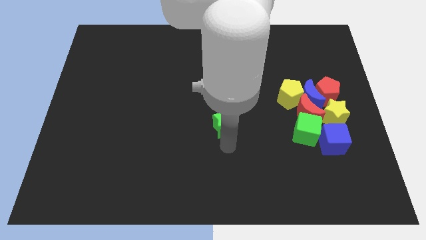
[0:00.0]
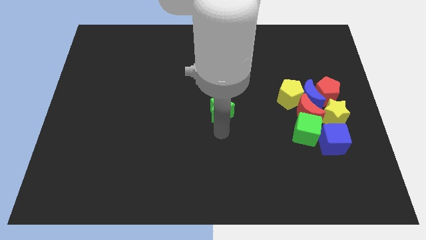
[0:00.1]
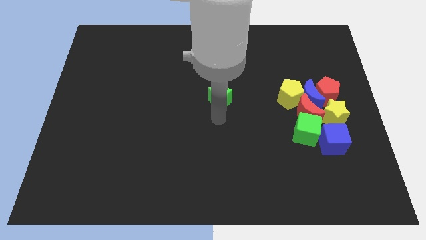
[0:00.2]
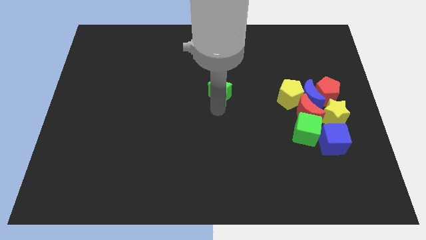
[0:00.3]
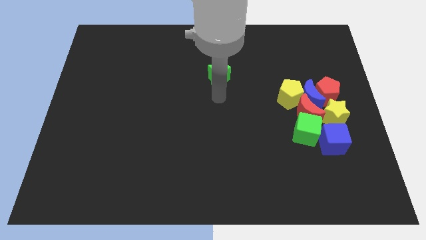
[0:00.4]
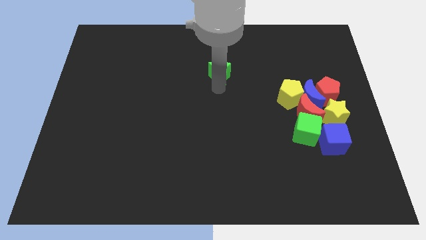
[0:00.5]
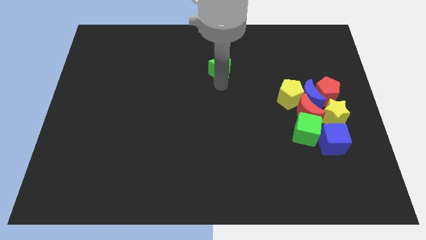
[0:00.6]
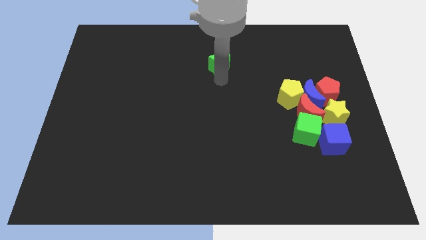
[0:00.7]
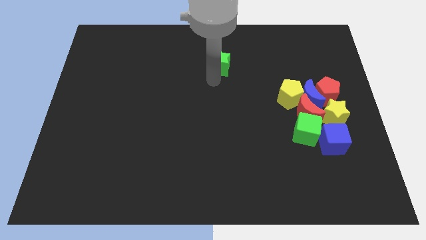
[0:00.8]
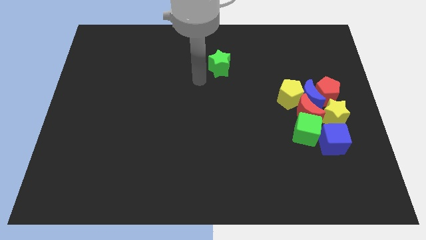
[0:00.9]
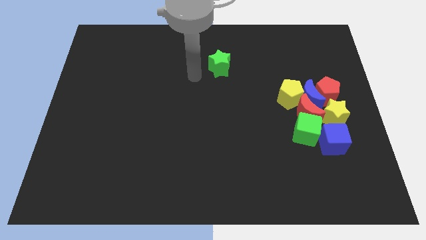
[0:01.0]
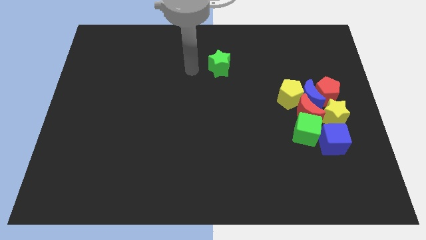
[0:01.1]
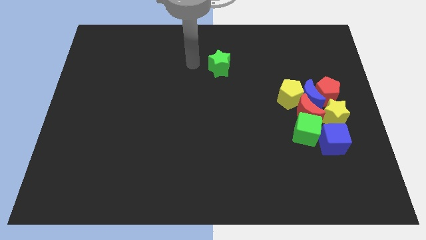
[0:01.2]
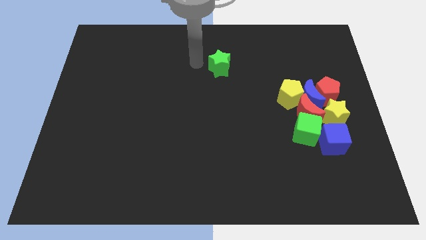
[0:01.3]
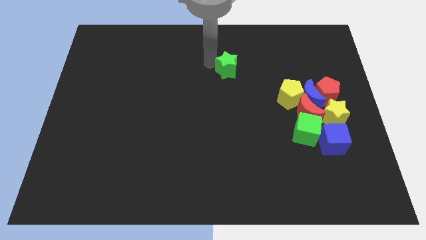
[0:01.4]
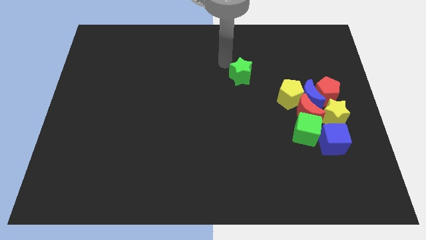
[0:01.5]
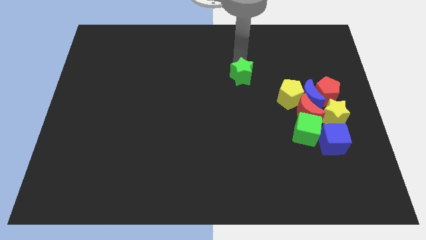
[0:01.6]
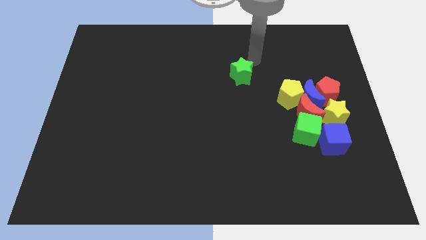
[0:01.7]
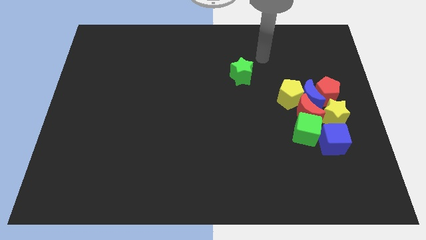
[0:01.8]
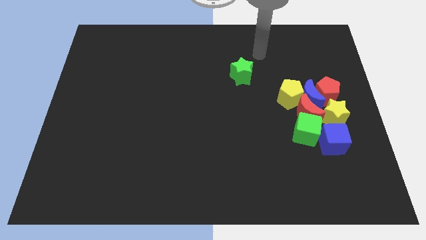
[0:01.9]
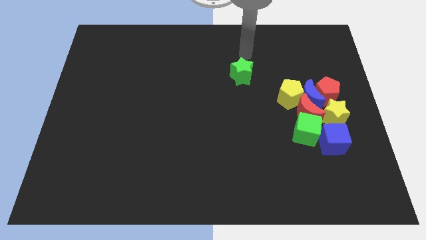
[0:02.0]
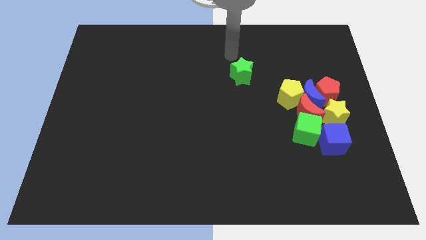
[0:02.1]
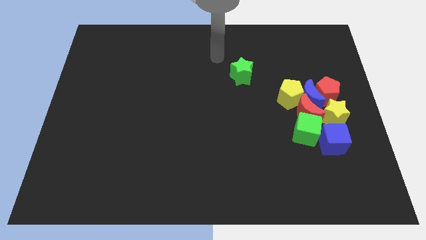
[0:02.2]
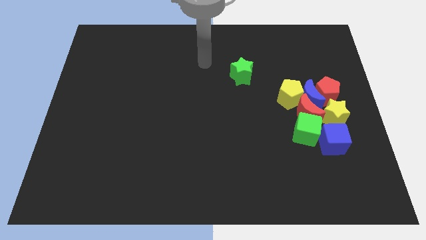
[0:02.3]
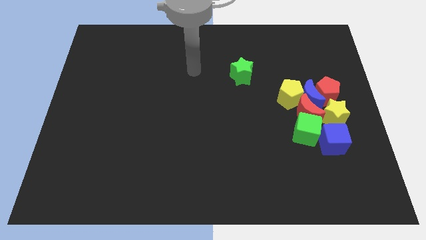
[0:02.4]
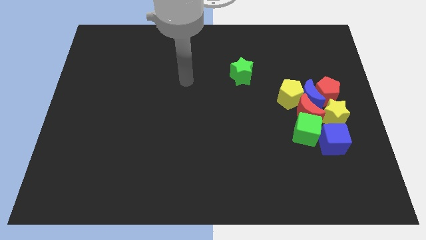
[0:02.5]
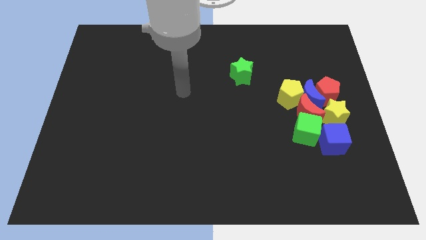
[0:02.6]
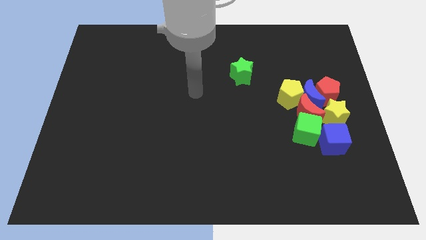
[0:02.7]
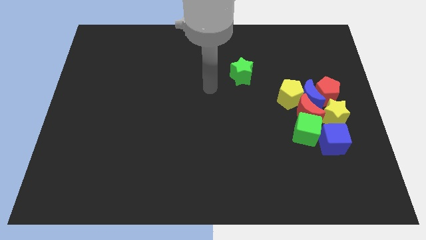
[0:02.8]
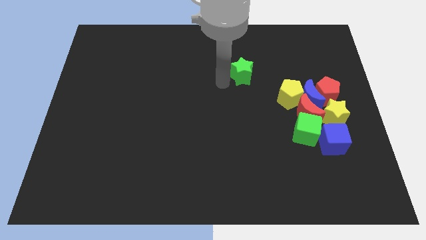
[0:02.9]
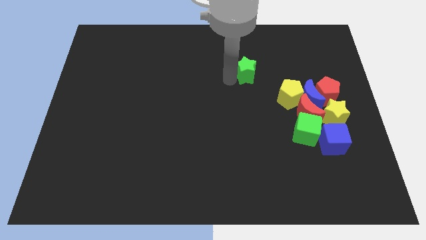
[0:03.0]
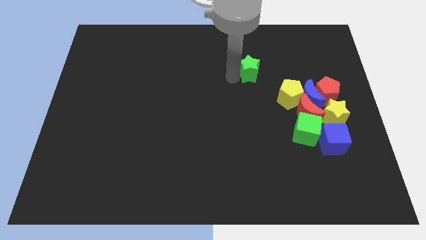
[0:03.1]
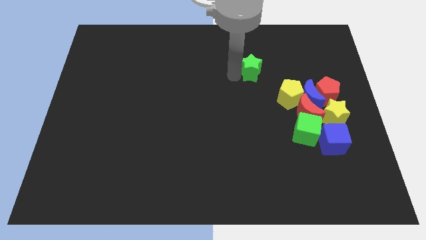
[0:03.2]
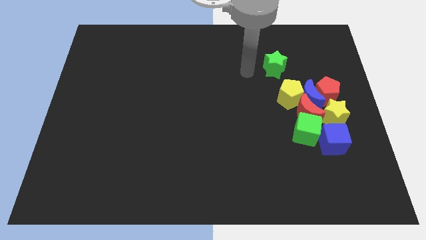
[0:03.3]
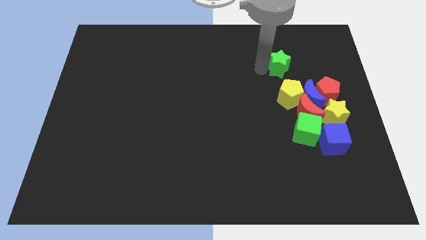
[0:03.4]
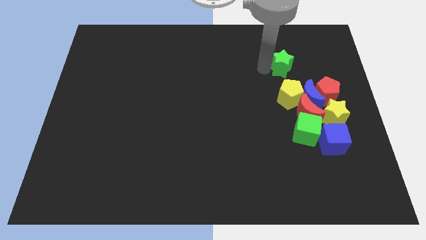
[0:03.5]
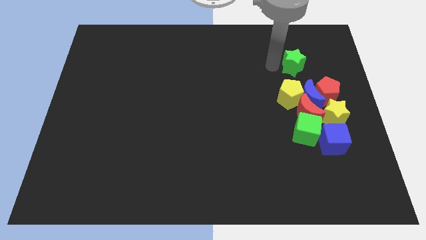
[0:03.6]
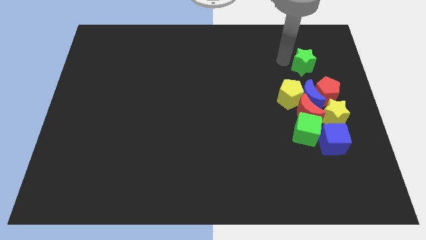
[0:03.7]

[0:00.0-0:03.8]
place the green star to the top the yellow pentagon

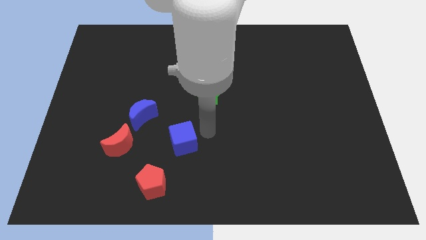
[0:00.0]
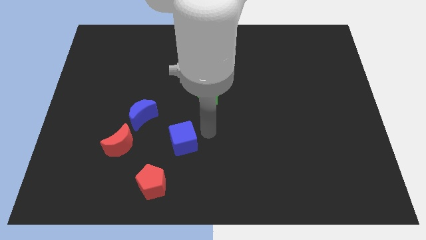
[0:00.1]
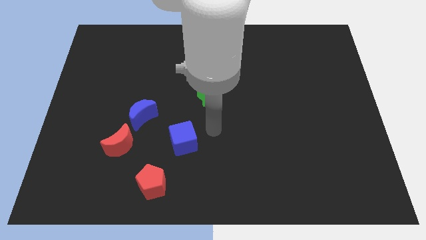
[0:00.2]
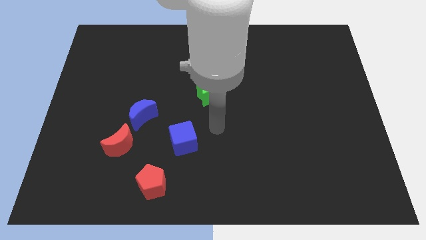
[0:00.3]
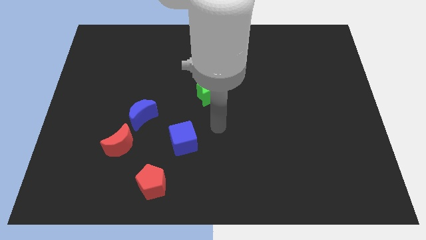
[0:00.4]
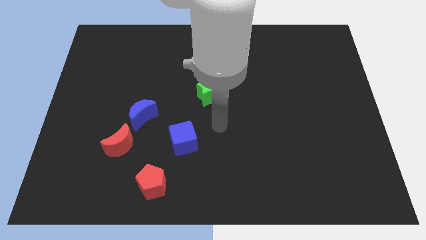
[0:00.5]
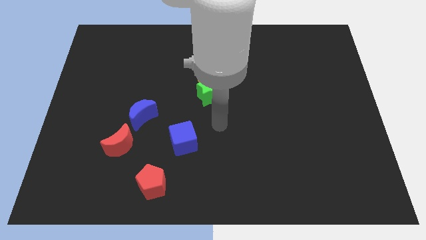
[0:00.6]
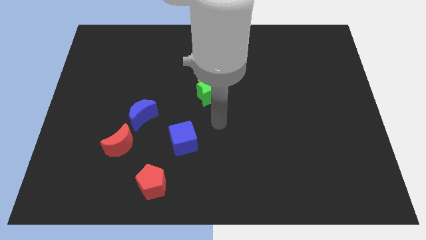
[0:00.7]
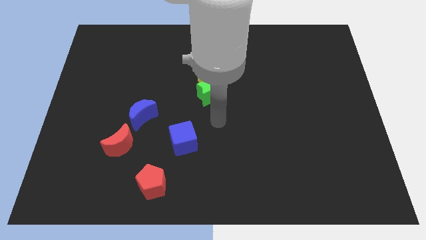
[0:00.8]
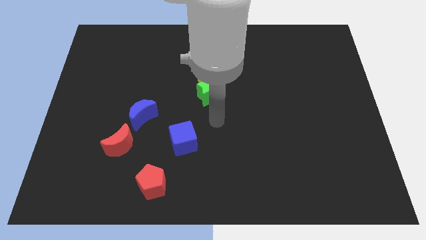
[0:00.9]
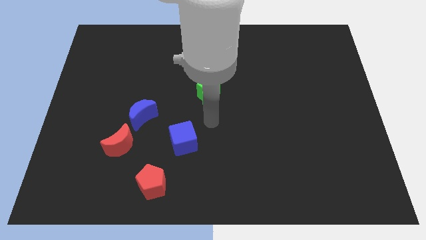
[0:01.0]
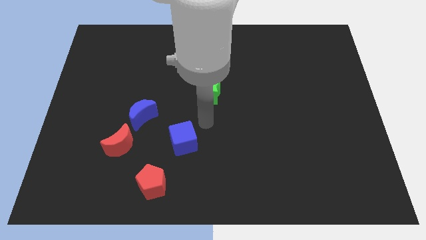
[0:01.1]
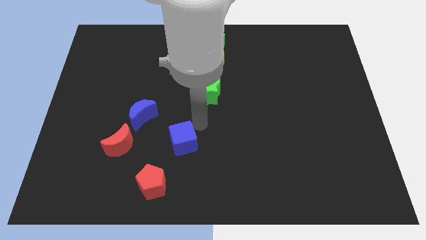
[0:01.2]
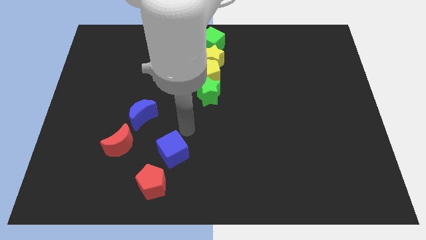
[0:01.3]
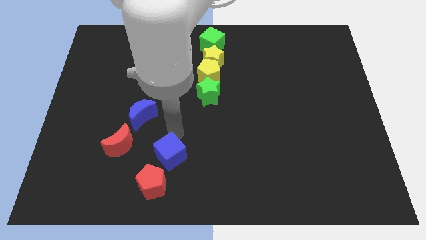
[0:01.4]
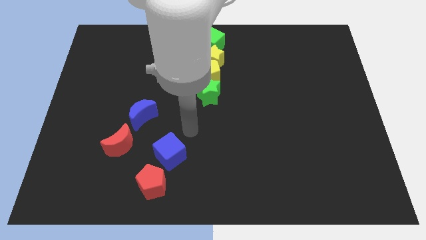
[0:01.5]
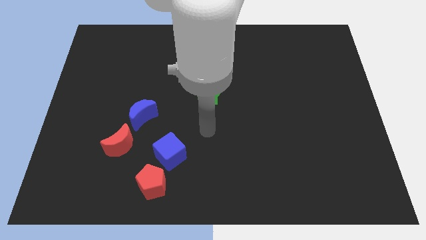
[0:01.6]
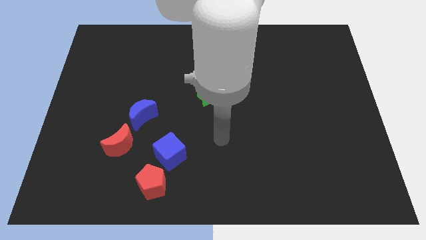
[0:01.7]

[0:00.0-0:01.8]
move the blue cube towards the red pentagon

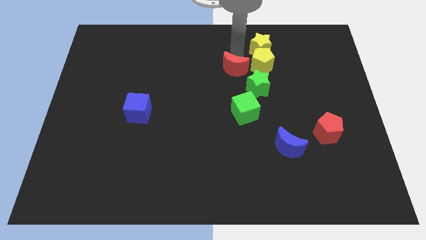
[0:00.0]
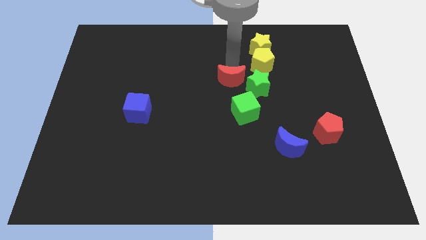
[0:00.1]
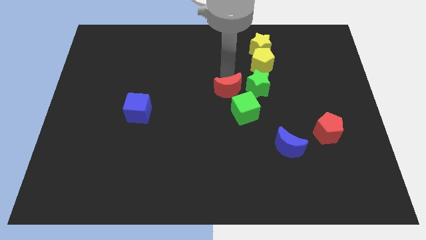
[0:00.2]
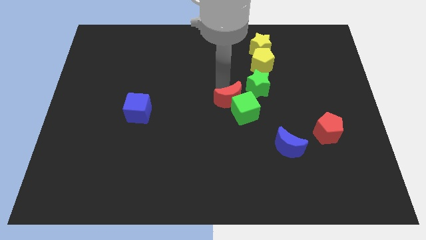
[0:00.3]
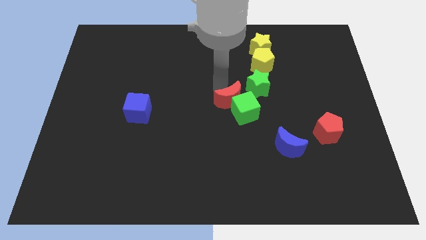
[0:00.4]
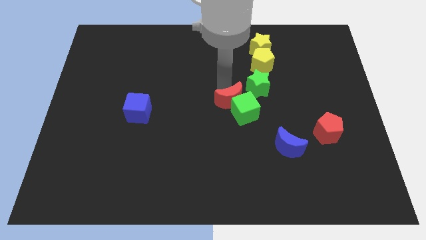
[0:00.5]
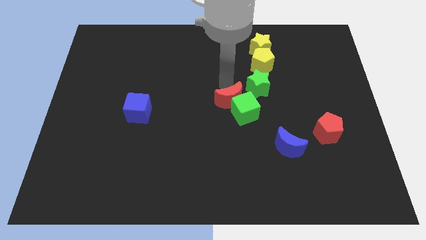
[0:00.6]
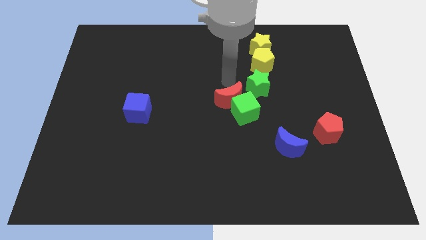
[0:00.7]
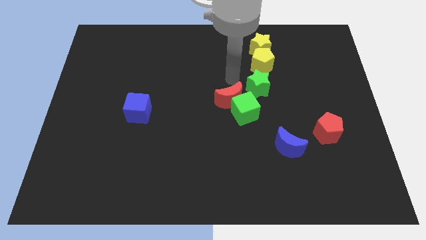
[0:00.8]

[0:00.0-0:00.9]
place the red moon at the top left side of green cube

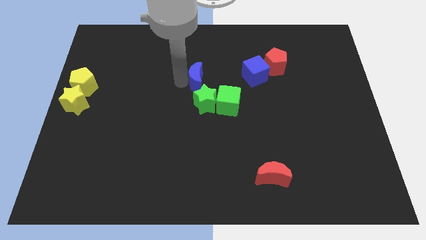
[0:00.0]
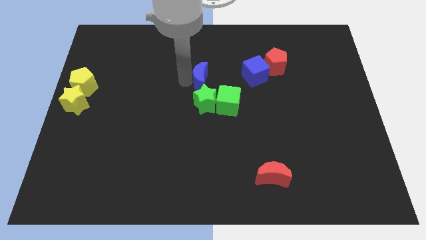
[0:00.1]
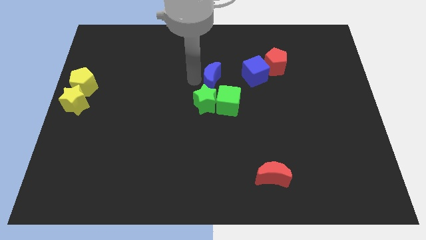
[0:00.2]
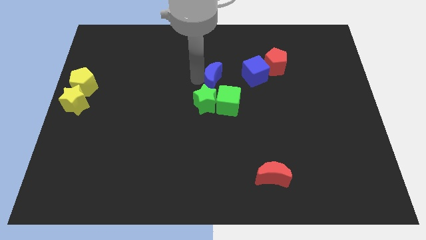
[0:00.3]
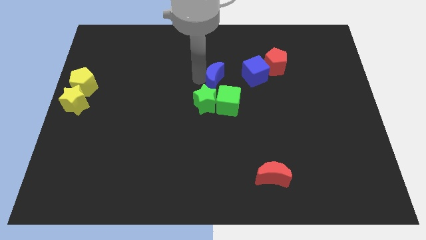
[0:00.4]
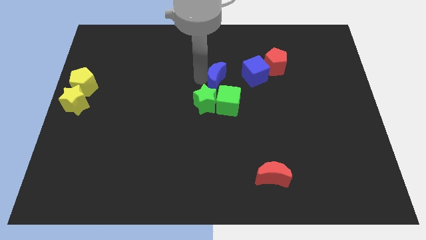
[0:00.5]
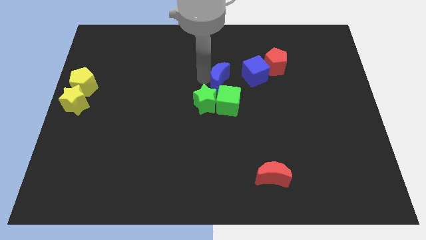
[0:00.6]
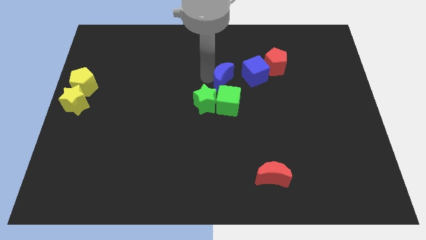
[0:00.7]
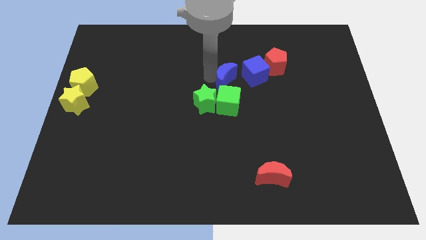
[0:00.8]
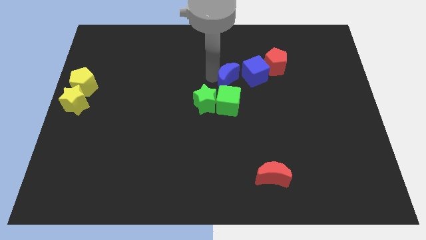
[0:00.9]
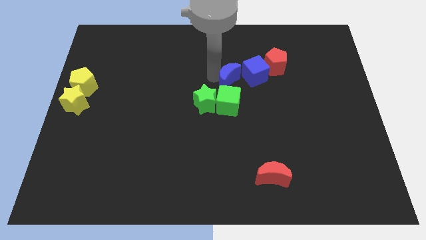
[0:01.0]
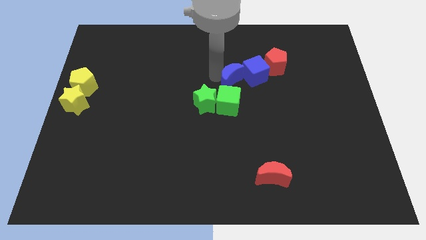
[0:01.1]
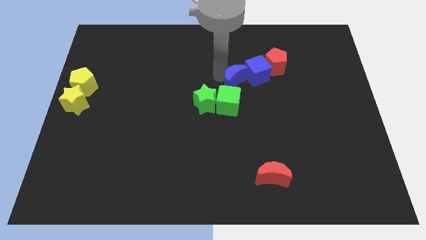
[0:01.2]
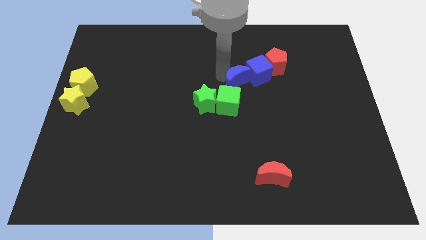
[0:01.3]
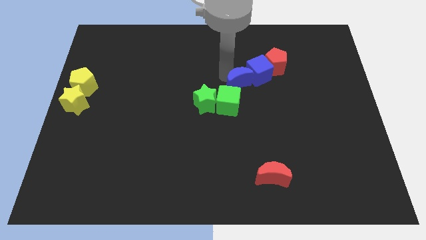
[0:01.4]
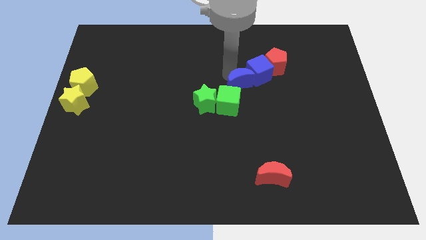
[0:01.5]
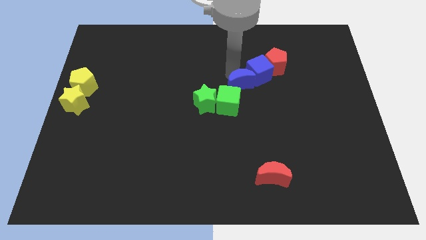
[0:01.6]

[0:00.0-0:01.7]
slide the blue moon to the right

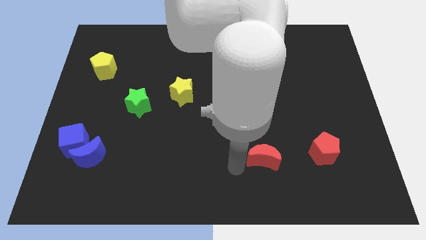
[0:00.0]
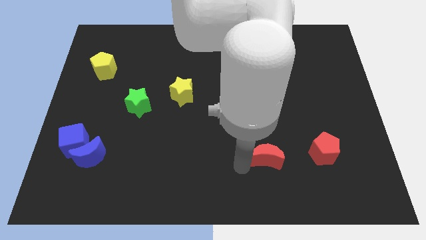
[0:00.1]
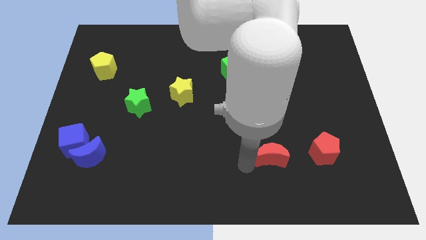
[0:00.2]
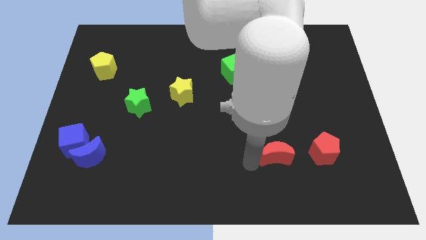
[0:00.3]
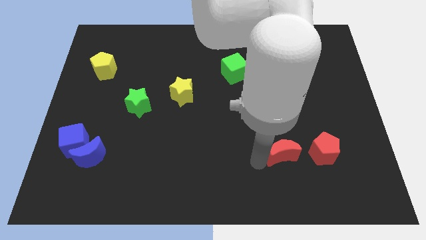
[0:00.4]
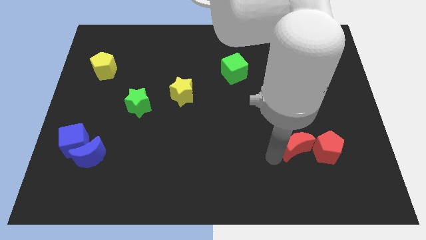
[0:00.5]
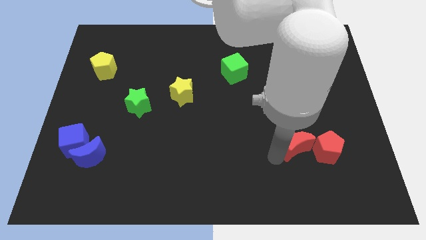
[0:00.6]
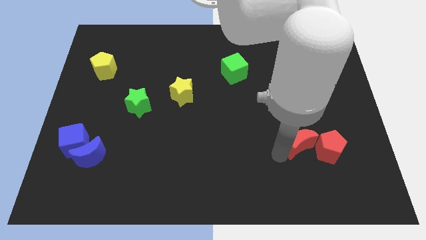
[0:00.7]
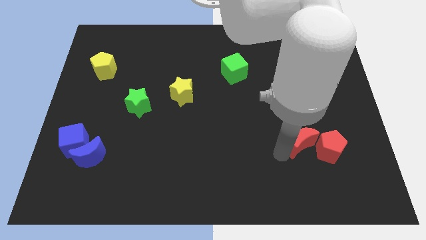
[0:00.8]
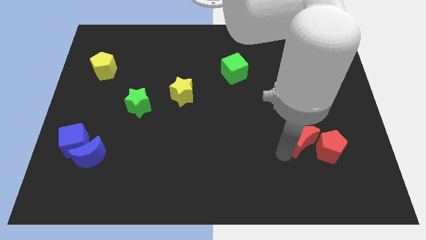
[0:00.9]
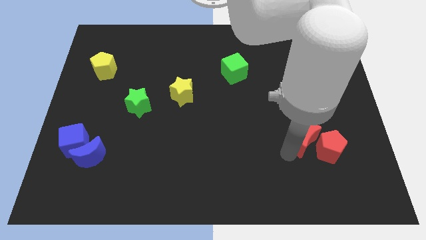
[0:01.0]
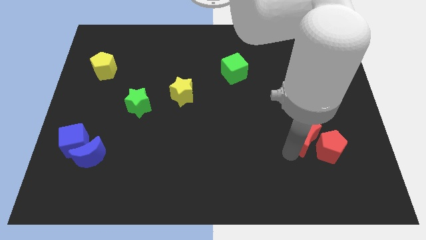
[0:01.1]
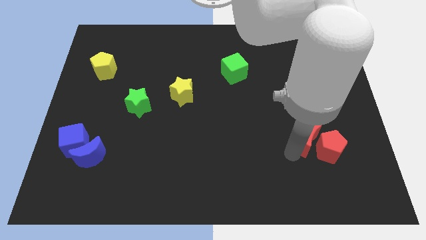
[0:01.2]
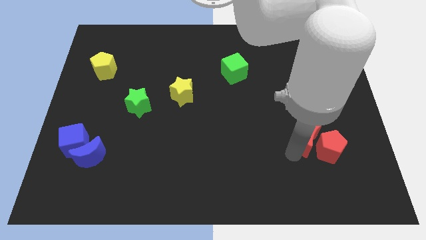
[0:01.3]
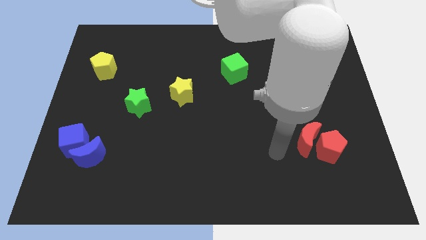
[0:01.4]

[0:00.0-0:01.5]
place the red moon to the left side of the red pentagon
